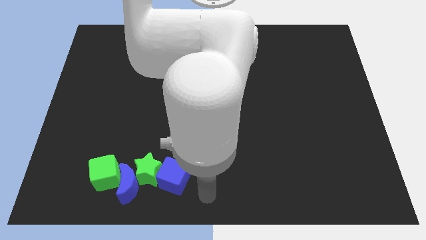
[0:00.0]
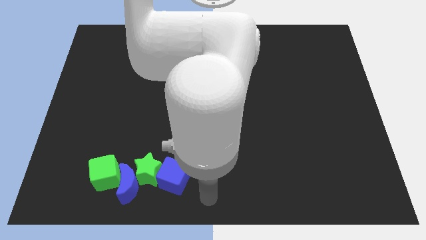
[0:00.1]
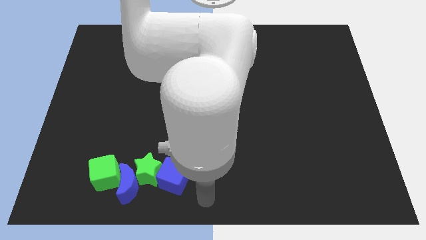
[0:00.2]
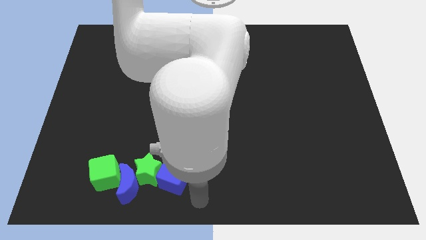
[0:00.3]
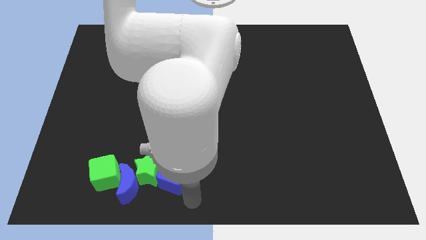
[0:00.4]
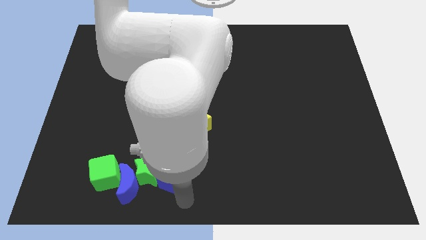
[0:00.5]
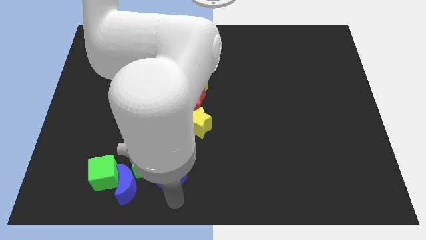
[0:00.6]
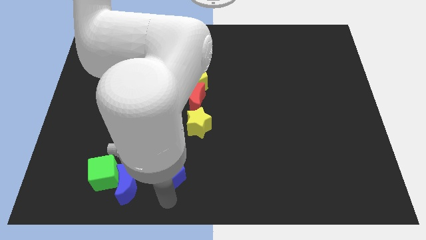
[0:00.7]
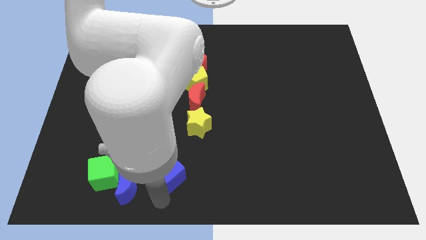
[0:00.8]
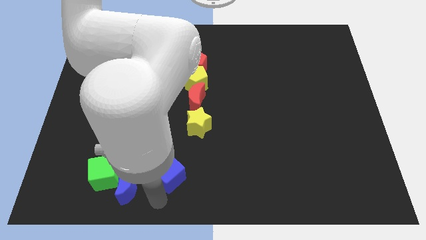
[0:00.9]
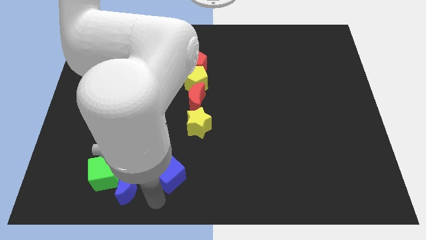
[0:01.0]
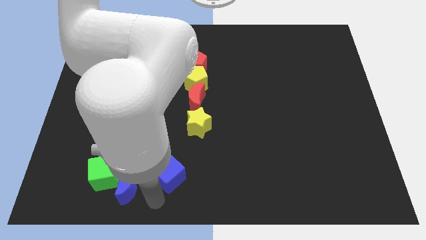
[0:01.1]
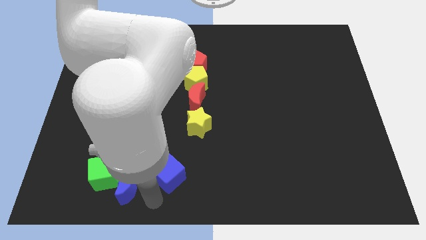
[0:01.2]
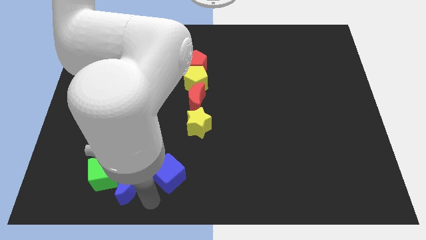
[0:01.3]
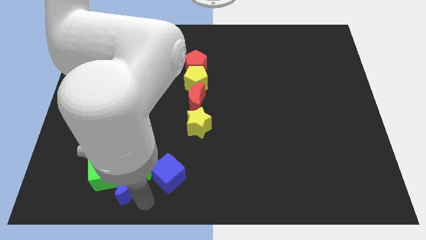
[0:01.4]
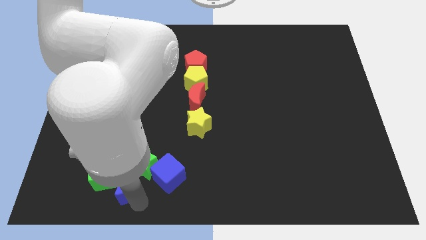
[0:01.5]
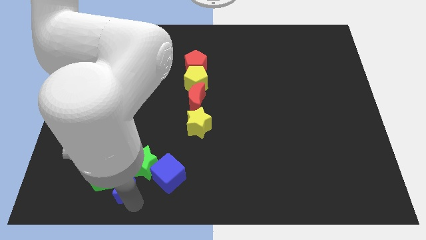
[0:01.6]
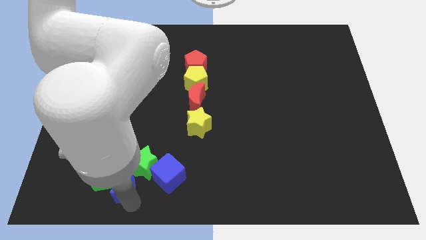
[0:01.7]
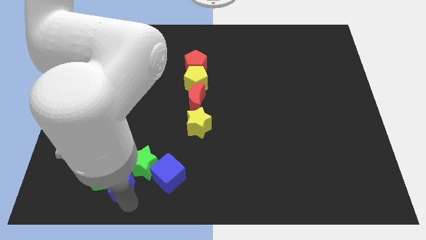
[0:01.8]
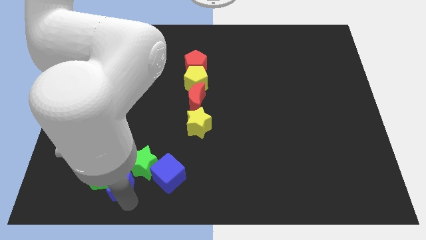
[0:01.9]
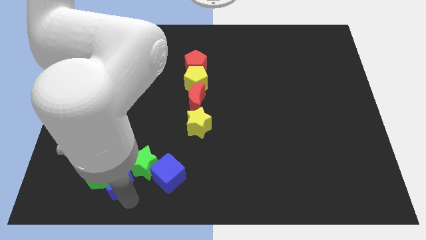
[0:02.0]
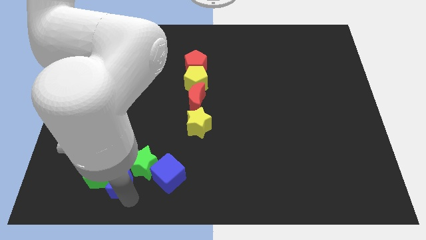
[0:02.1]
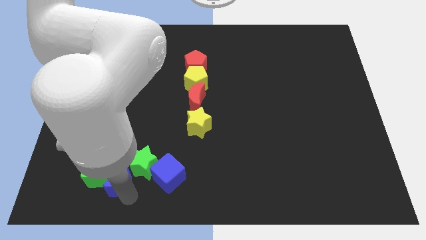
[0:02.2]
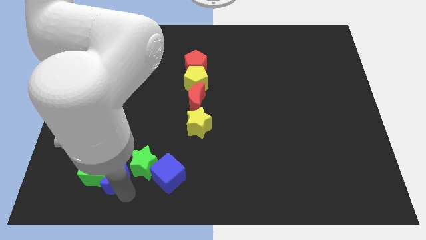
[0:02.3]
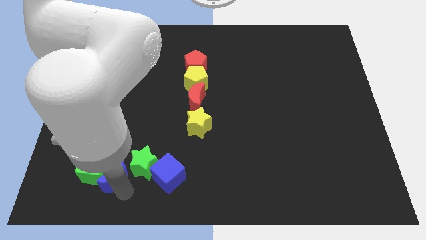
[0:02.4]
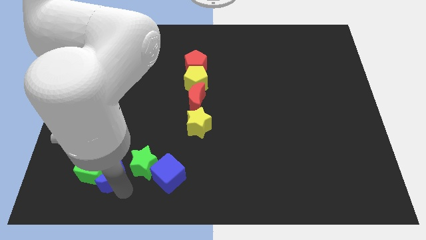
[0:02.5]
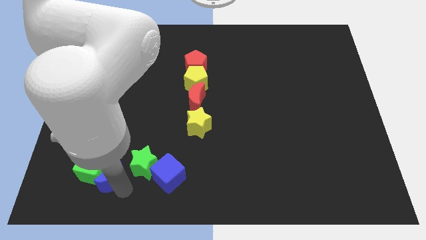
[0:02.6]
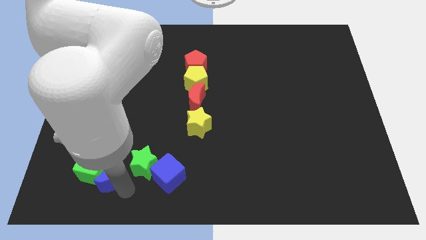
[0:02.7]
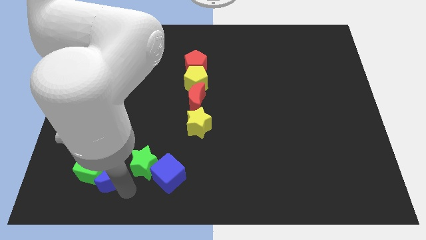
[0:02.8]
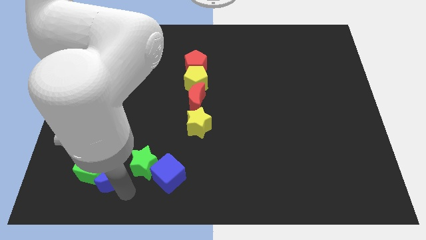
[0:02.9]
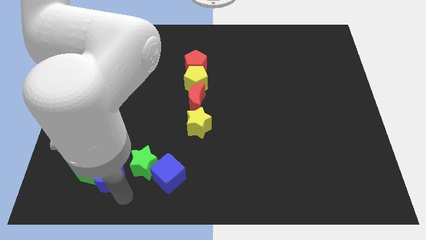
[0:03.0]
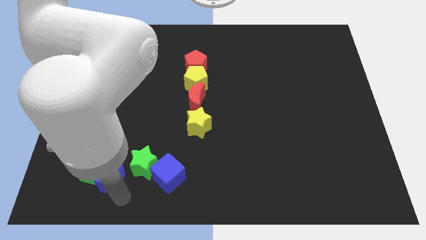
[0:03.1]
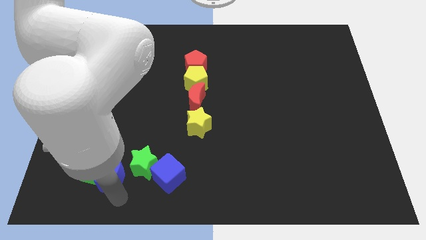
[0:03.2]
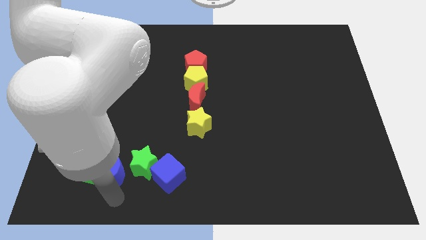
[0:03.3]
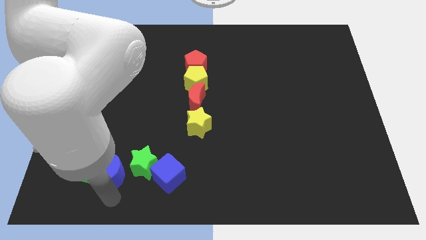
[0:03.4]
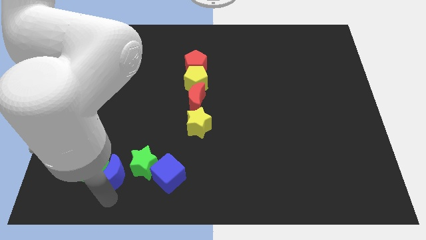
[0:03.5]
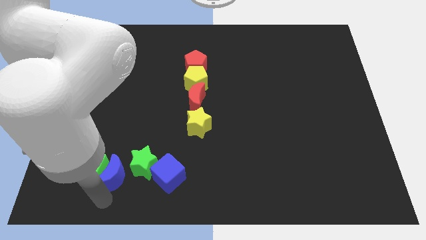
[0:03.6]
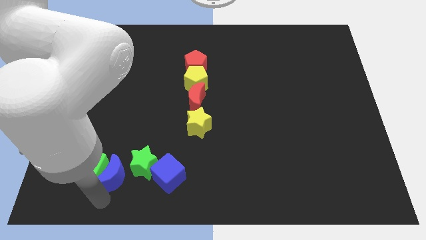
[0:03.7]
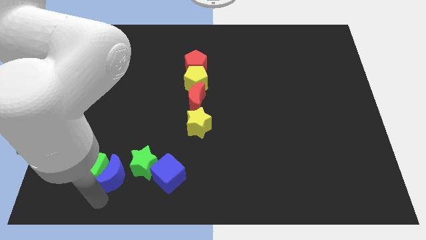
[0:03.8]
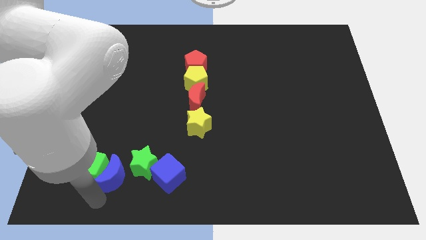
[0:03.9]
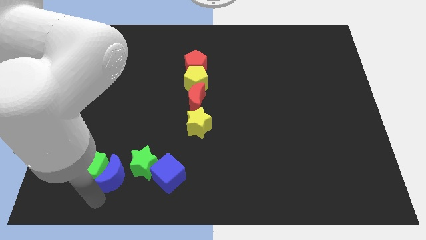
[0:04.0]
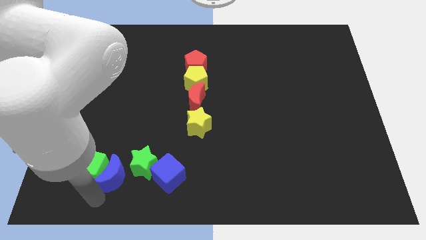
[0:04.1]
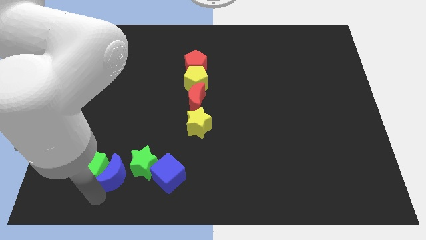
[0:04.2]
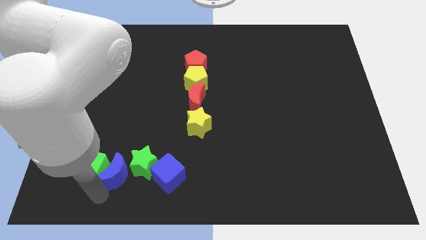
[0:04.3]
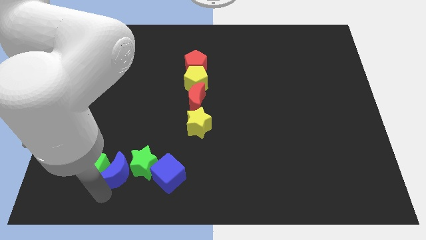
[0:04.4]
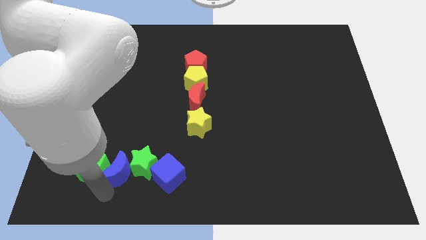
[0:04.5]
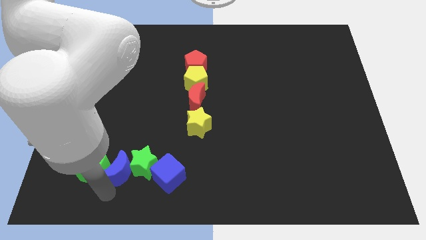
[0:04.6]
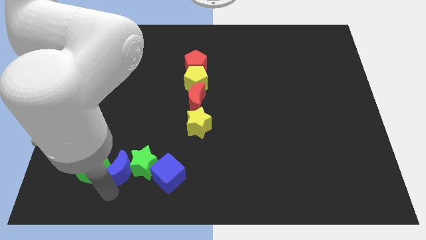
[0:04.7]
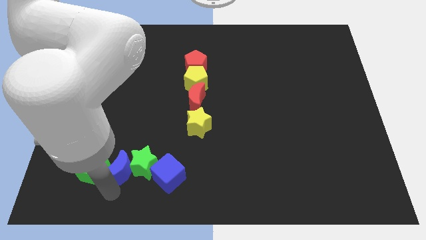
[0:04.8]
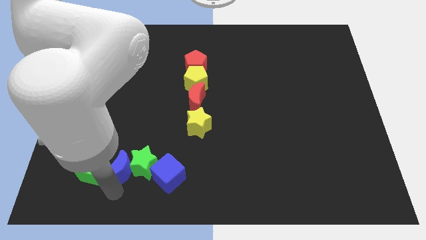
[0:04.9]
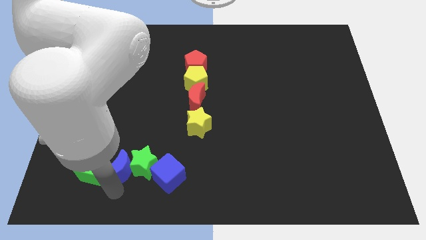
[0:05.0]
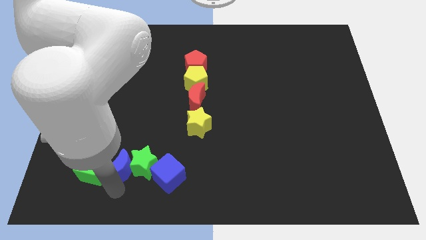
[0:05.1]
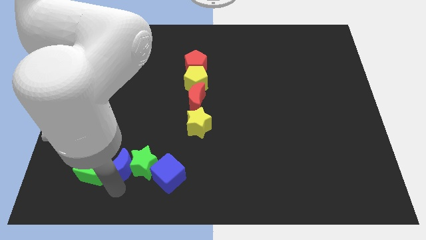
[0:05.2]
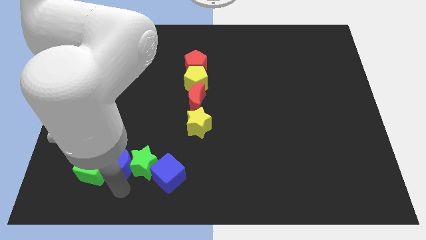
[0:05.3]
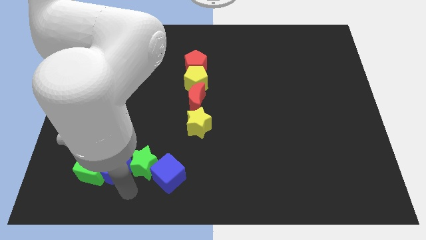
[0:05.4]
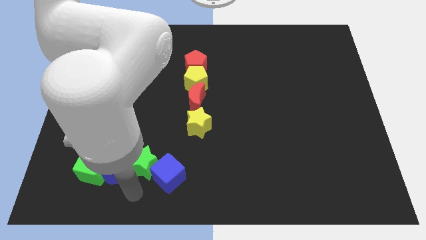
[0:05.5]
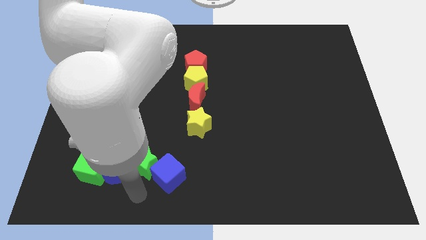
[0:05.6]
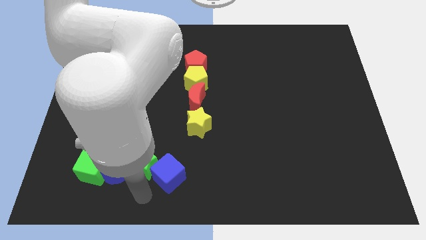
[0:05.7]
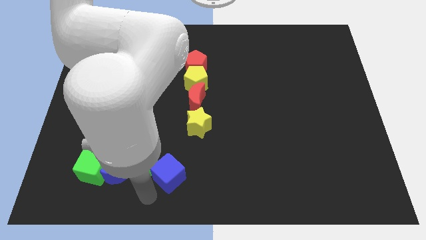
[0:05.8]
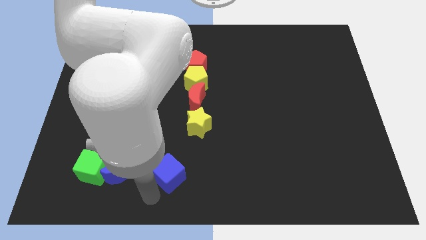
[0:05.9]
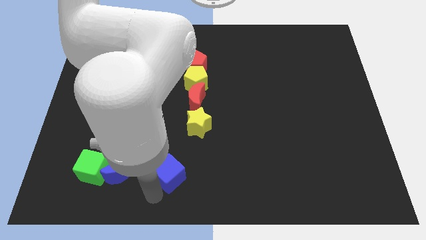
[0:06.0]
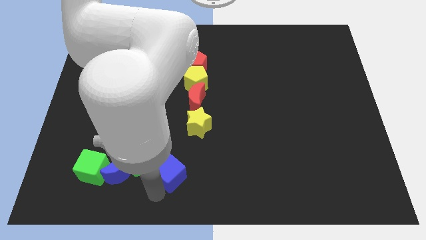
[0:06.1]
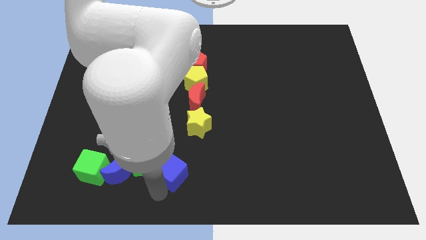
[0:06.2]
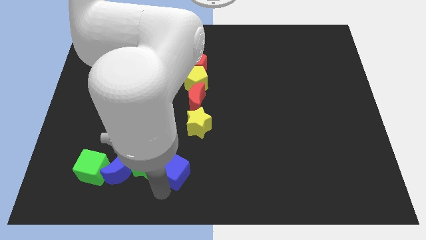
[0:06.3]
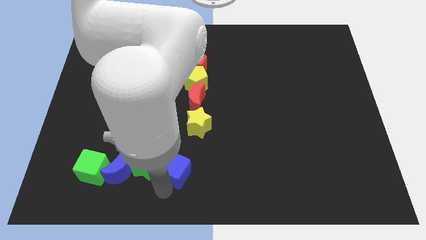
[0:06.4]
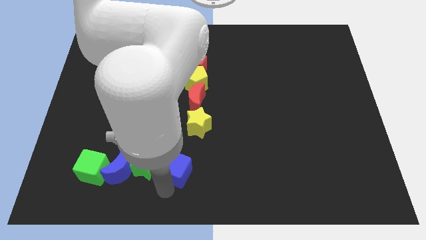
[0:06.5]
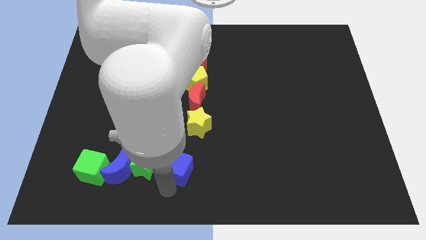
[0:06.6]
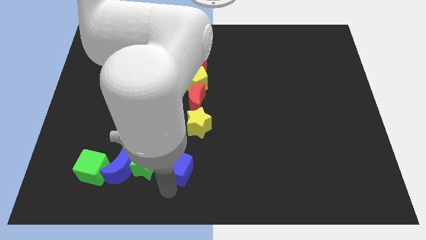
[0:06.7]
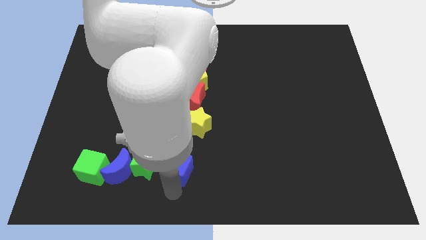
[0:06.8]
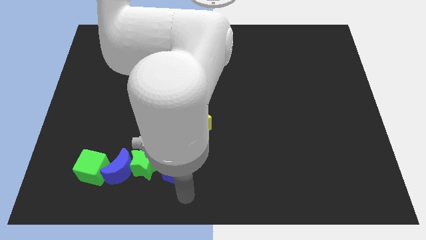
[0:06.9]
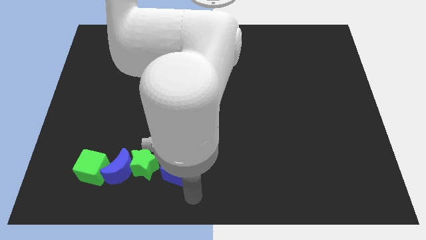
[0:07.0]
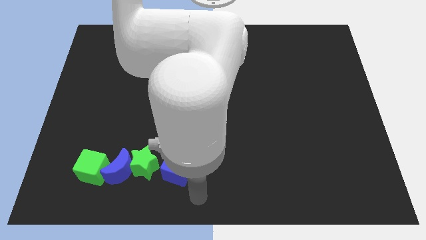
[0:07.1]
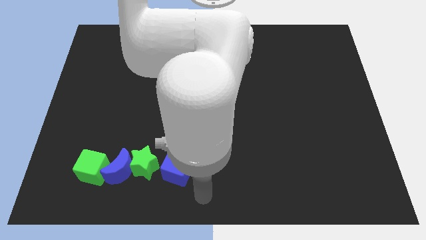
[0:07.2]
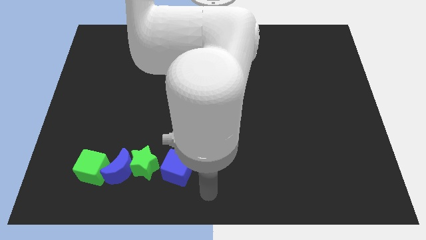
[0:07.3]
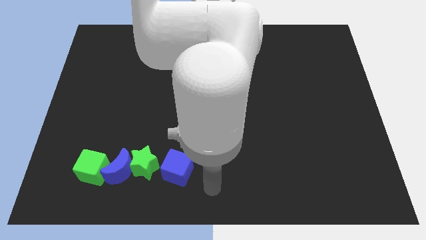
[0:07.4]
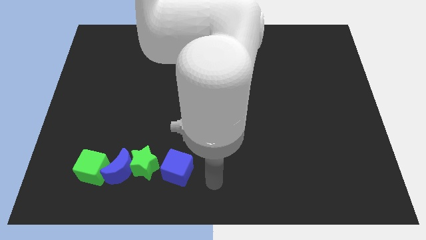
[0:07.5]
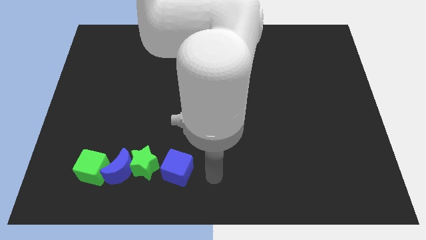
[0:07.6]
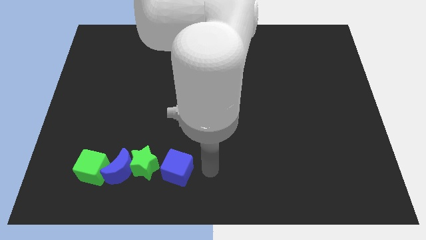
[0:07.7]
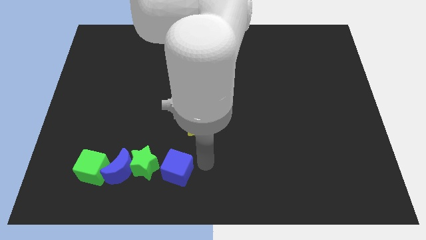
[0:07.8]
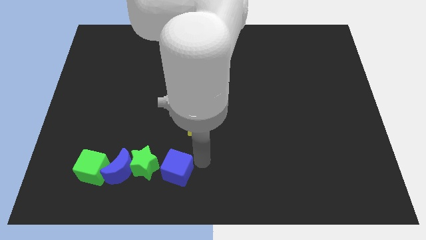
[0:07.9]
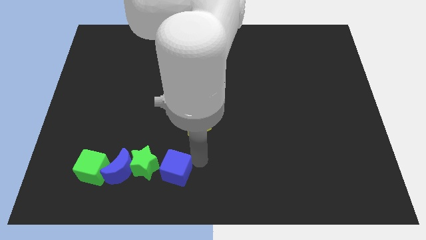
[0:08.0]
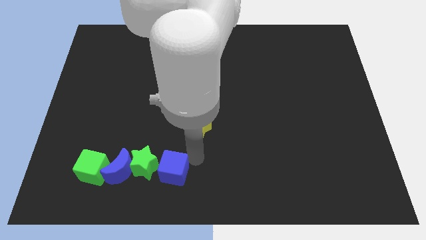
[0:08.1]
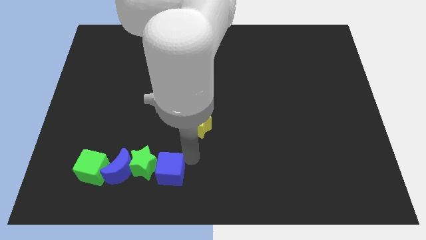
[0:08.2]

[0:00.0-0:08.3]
push the blue cube close to the green star in a row

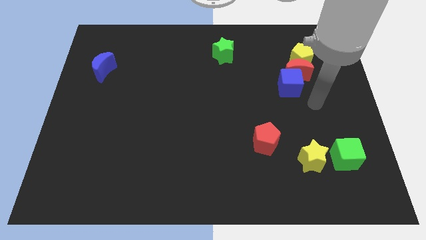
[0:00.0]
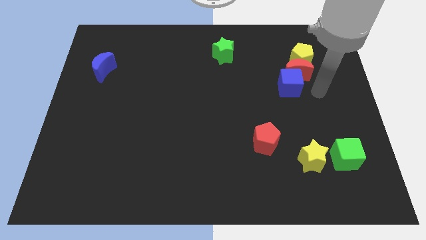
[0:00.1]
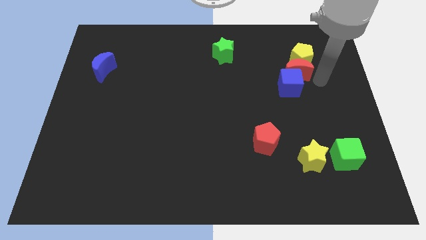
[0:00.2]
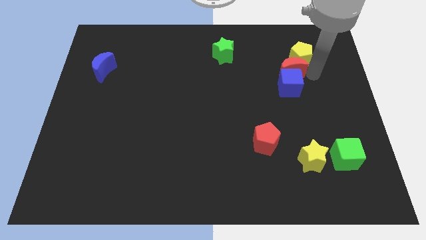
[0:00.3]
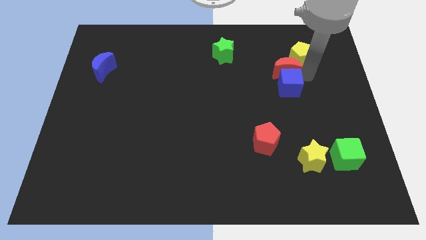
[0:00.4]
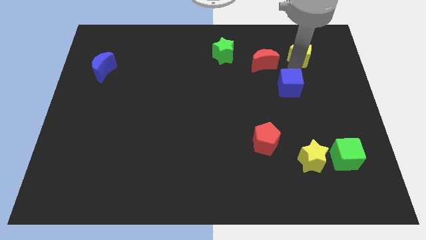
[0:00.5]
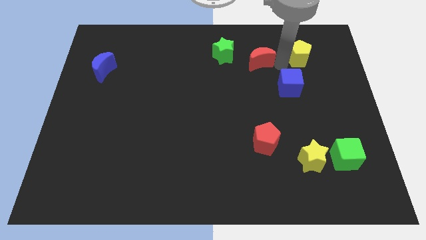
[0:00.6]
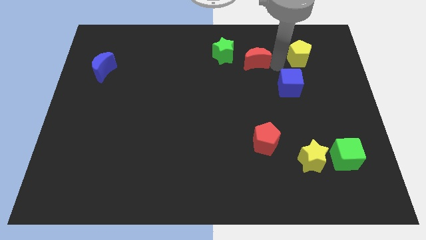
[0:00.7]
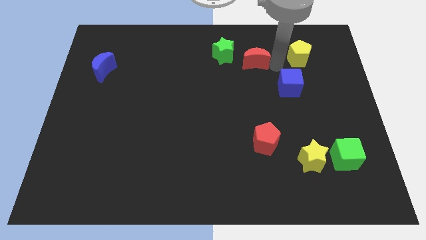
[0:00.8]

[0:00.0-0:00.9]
separate red crescent from blue cube and yellow pentagon
